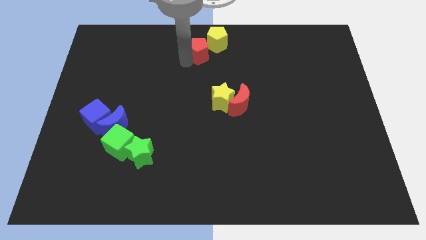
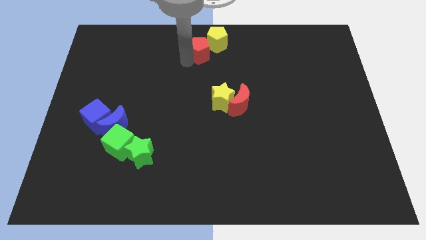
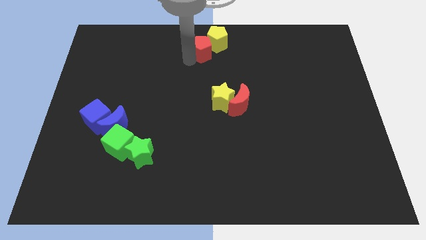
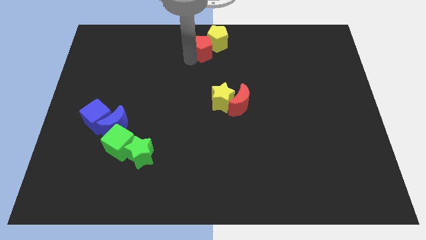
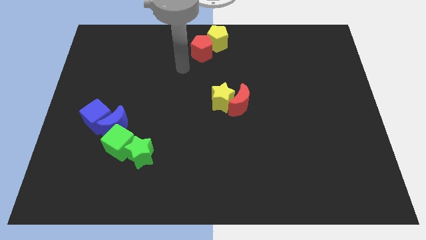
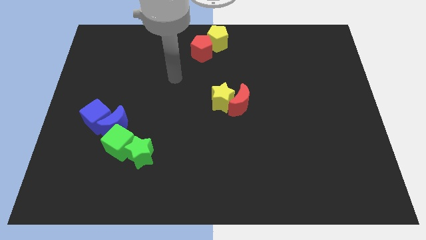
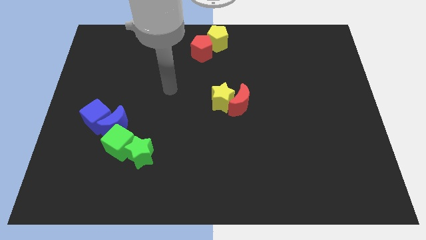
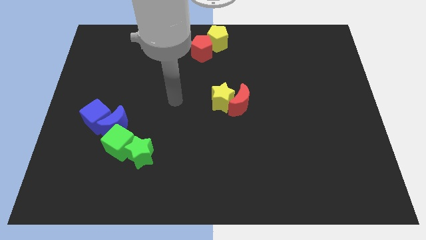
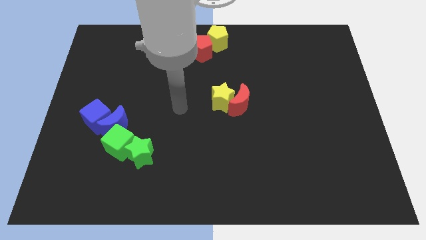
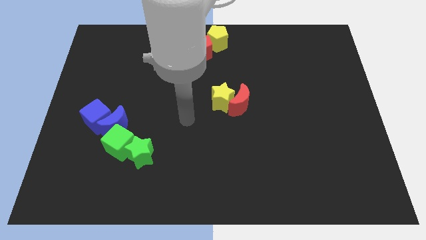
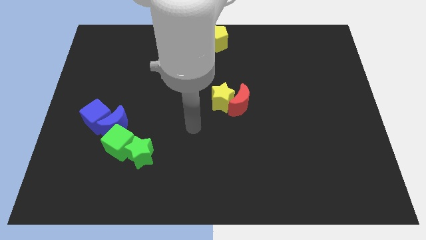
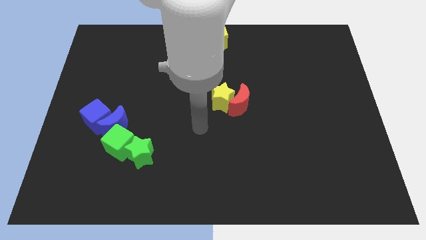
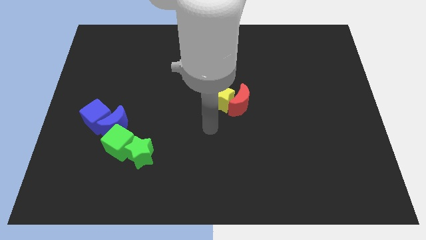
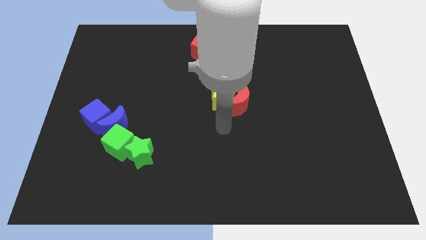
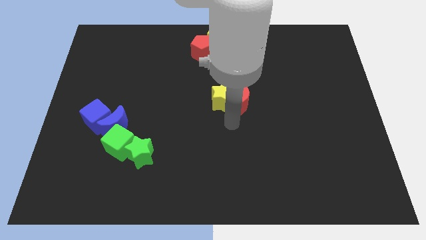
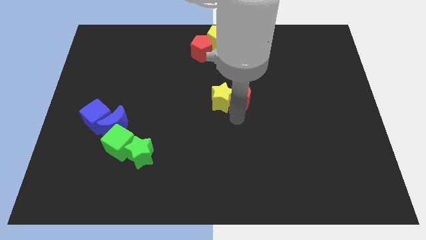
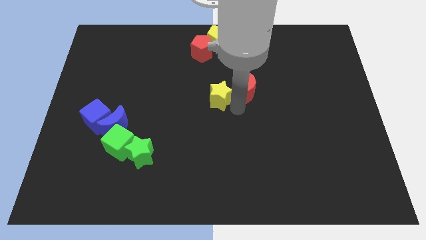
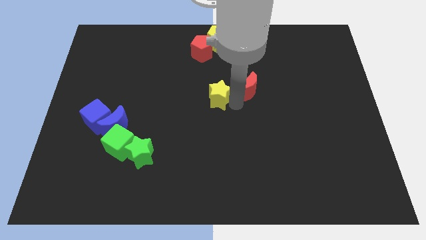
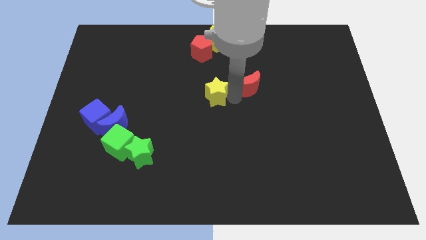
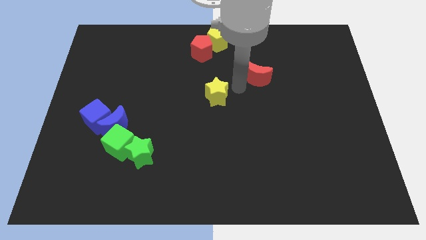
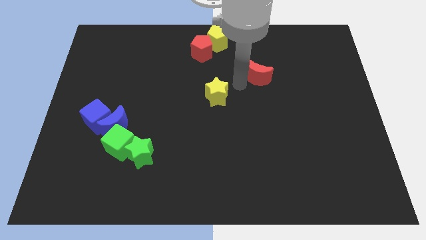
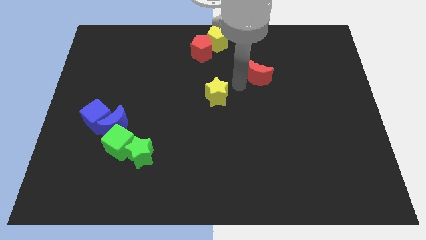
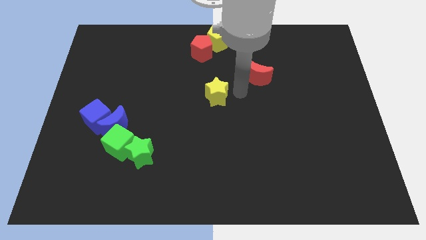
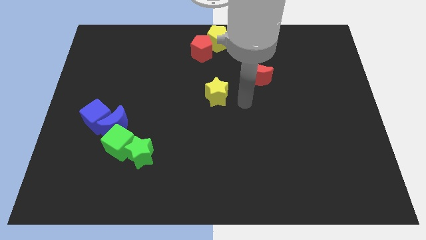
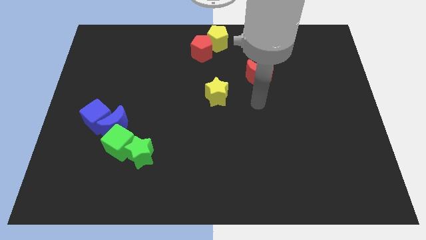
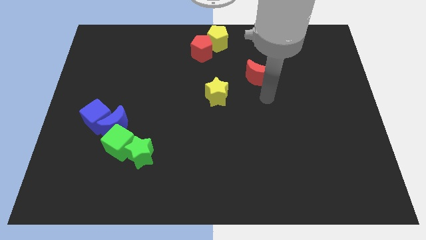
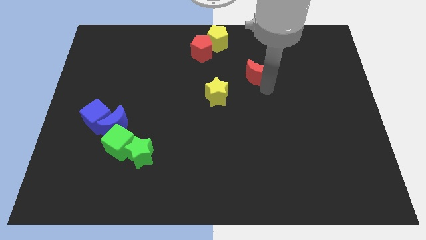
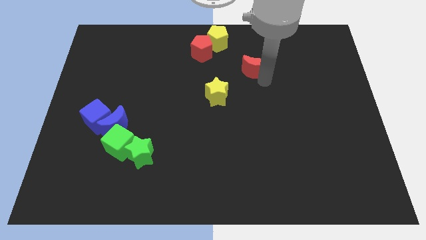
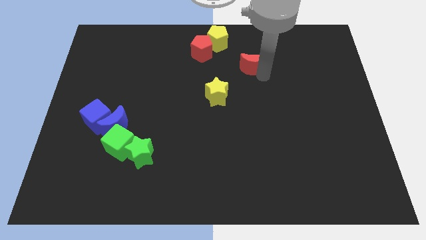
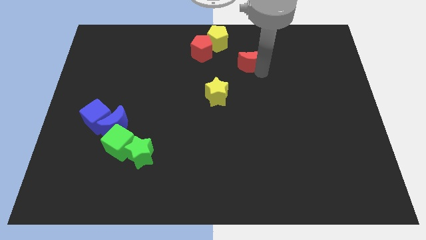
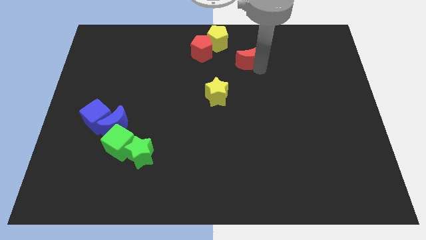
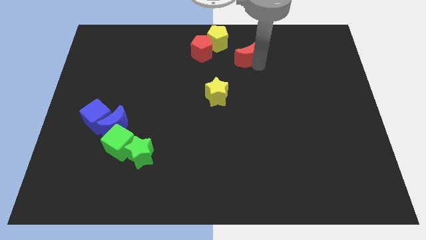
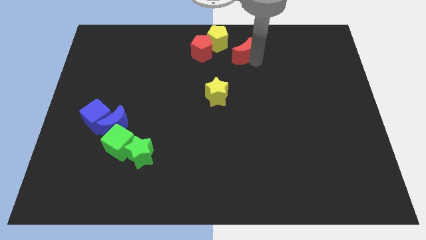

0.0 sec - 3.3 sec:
separate the yellow star from red moon

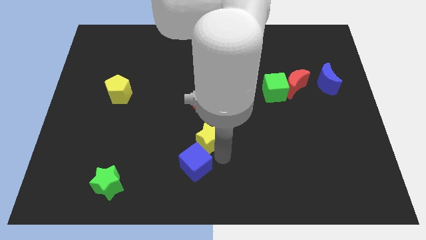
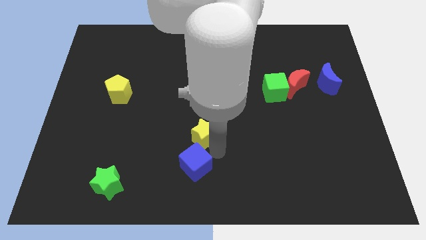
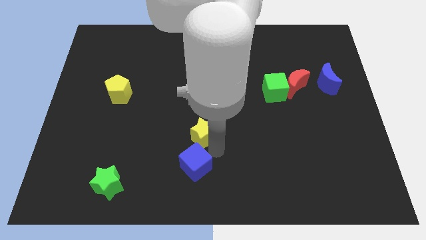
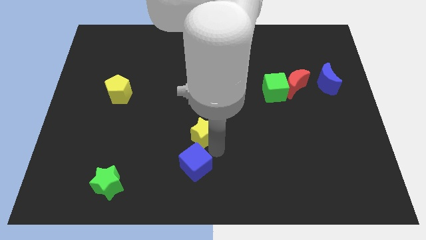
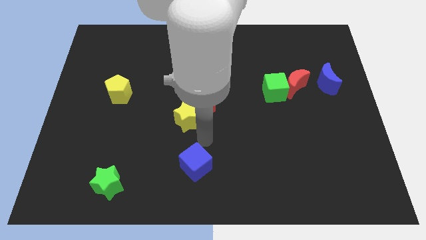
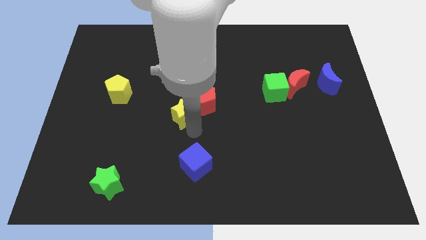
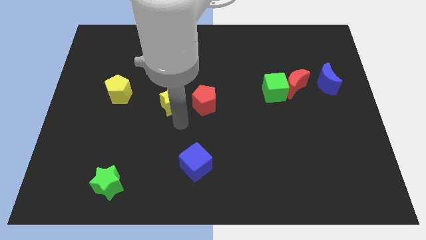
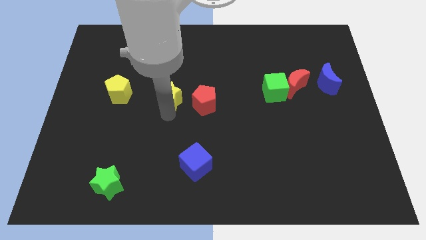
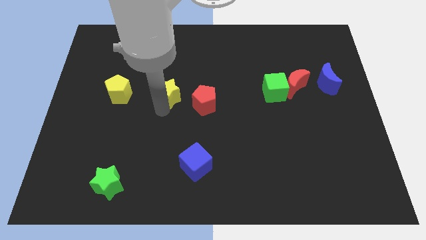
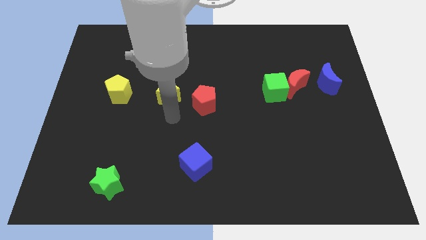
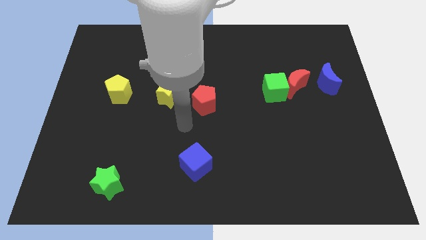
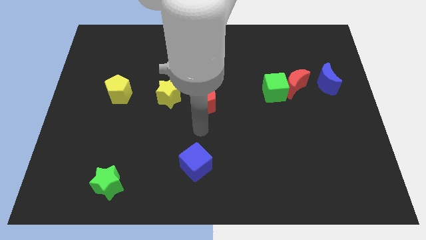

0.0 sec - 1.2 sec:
place the yellow star to the right side of the yellow pentagon

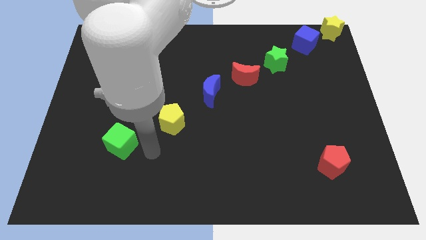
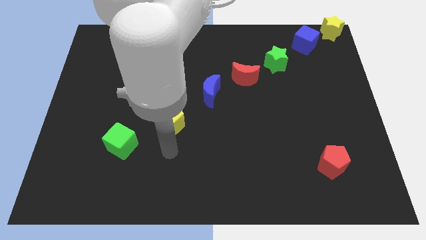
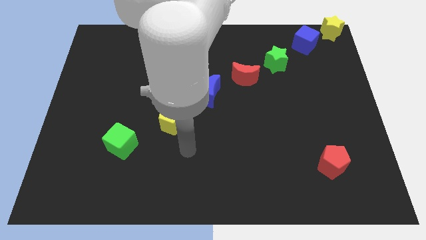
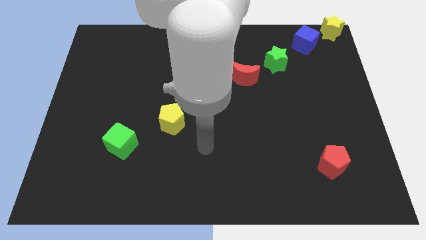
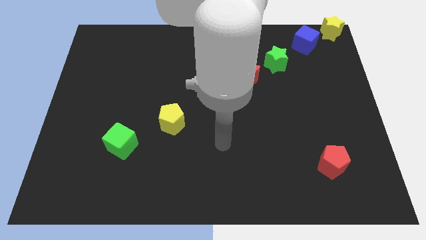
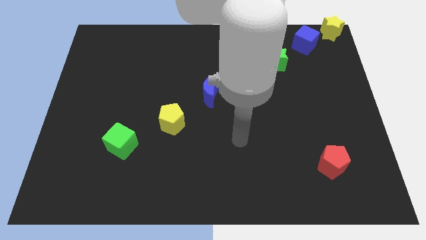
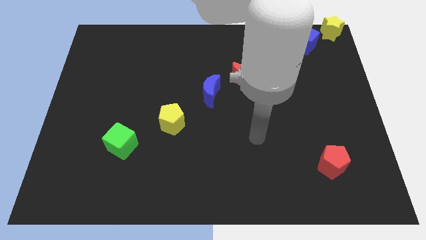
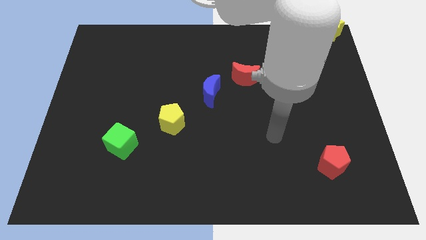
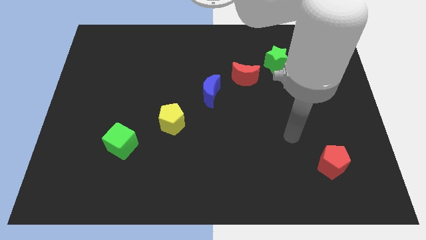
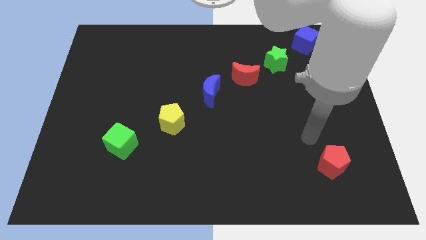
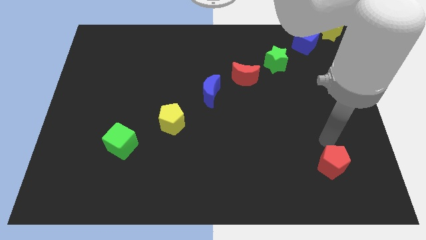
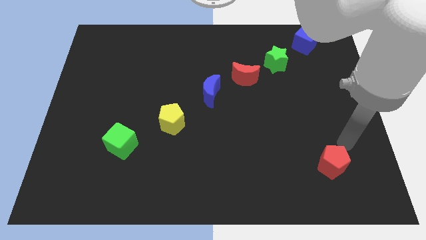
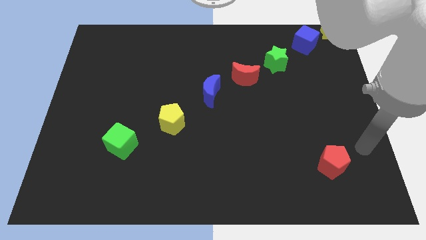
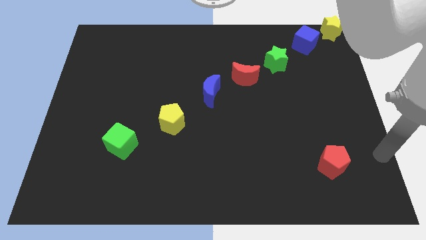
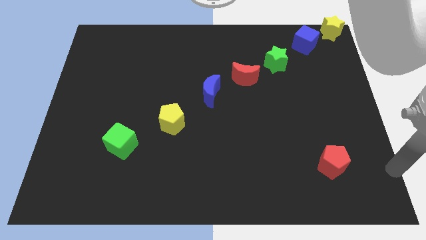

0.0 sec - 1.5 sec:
point the arm to the right of the red pentagon

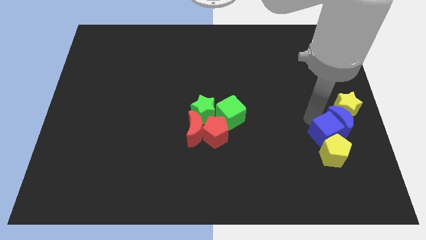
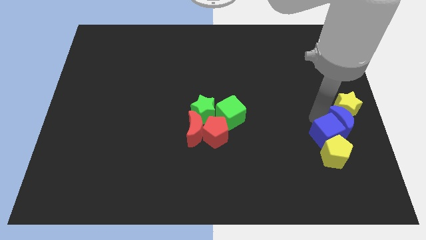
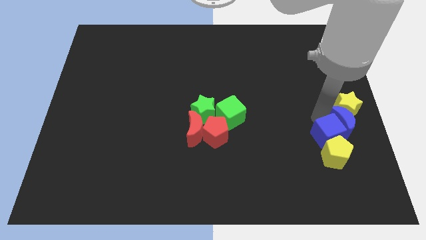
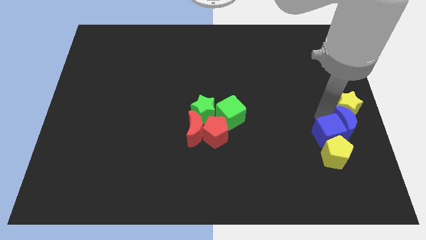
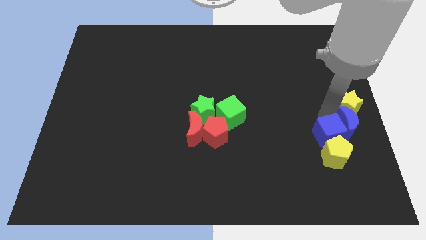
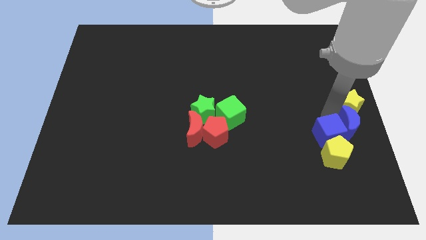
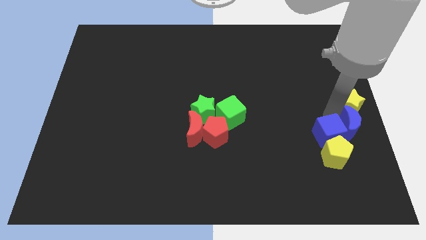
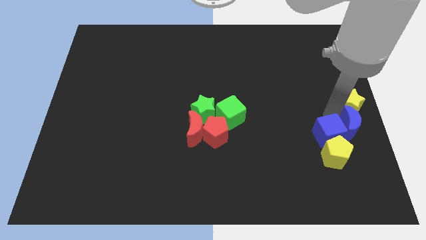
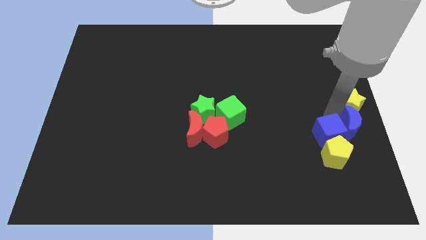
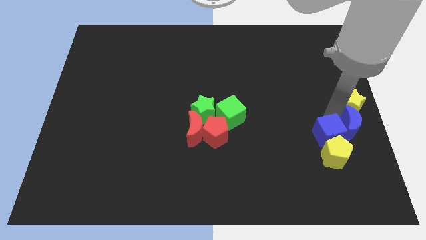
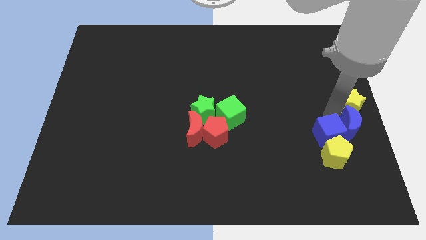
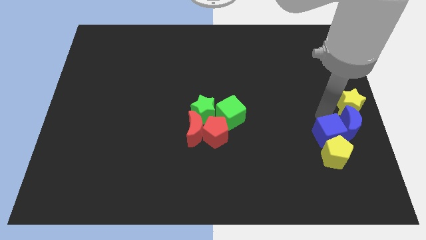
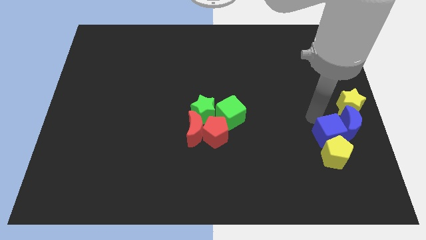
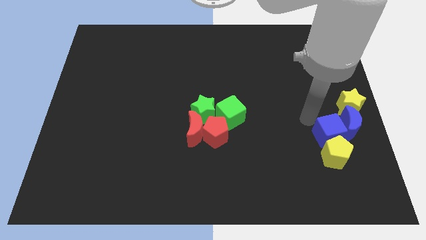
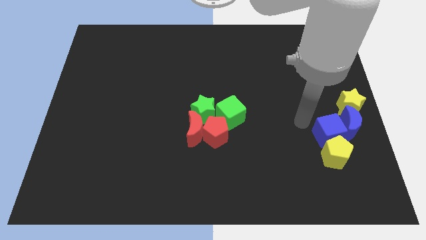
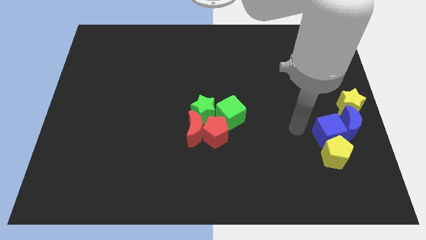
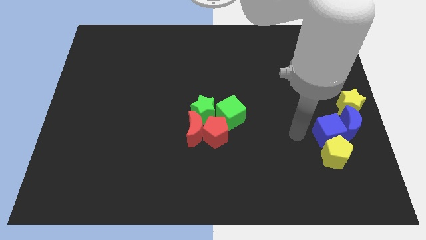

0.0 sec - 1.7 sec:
push the blue crescent to the right of the board

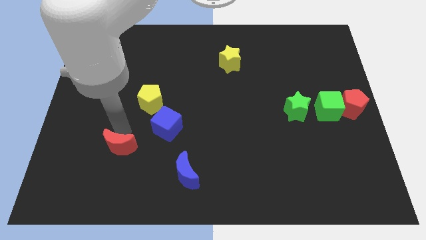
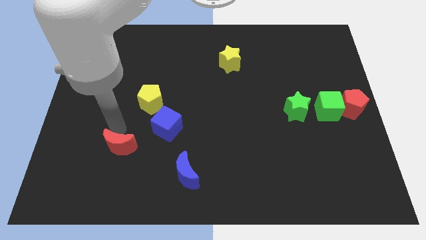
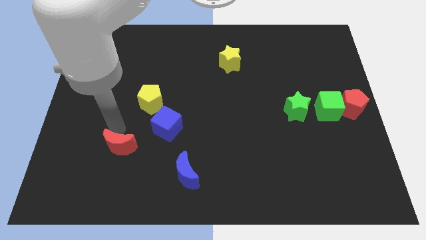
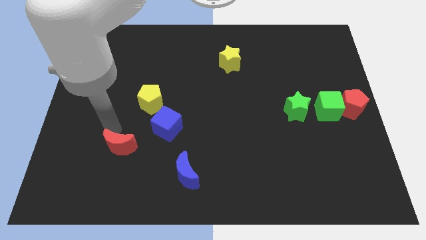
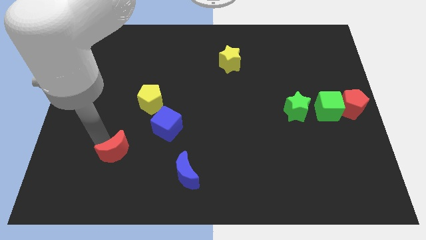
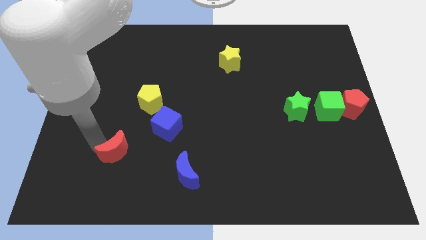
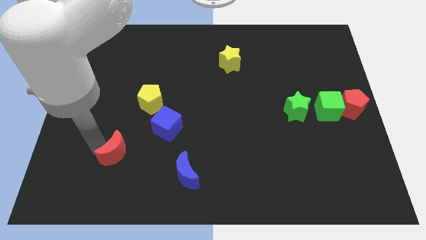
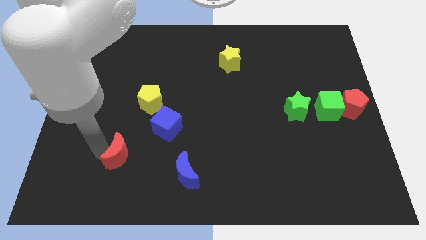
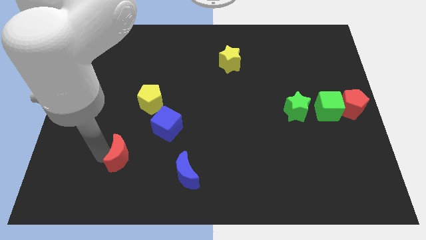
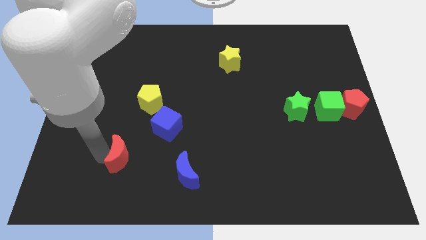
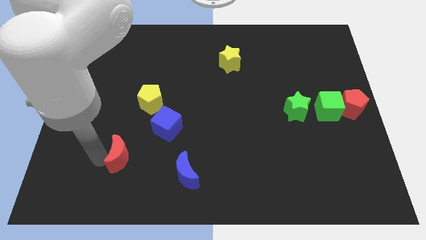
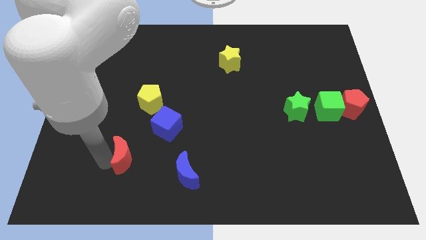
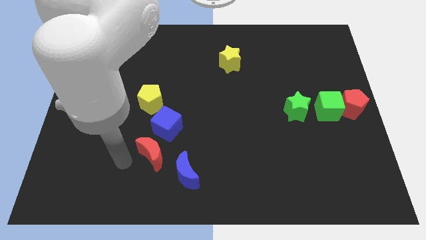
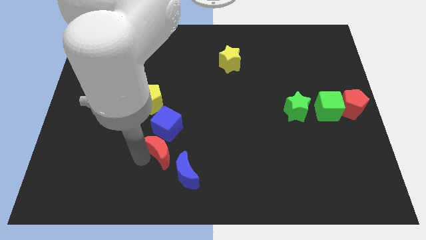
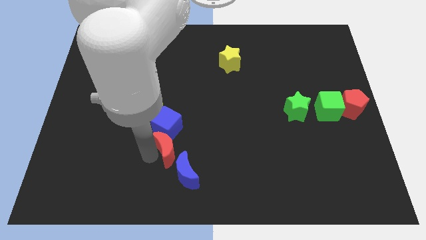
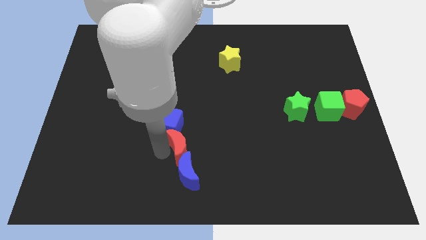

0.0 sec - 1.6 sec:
move the red moon into the blue cube
